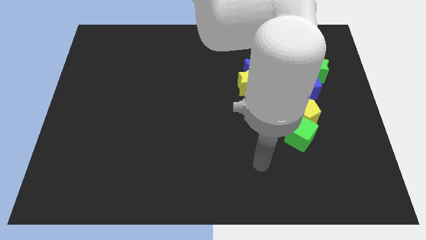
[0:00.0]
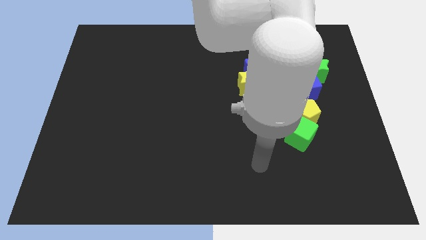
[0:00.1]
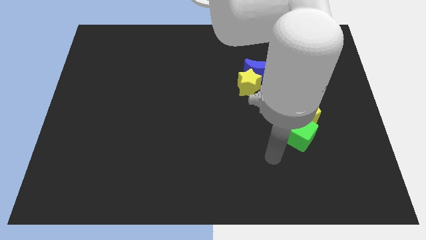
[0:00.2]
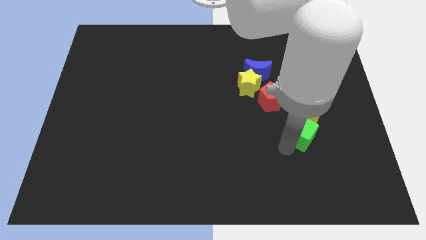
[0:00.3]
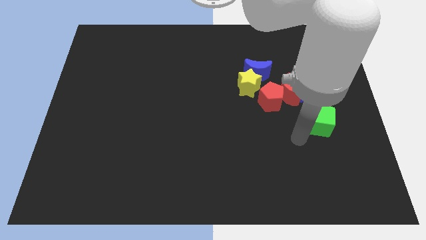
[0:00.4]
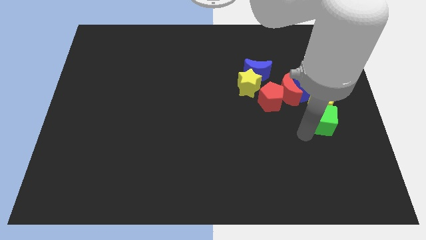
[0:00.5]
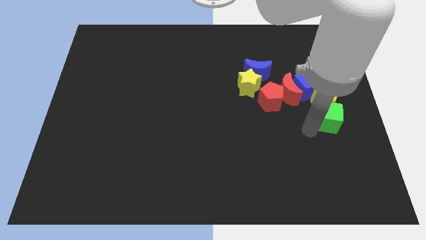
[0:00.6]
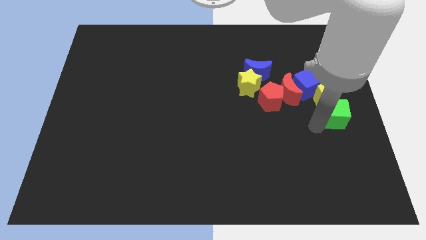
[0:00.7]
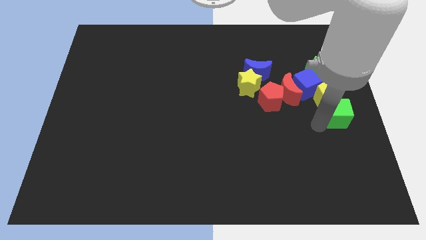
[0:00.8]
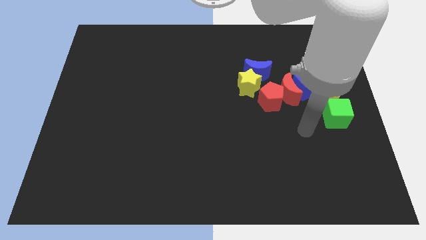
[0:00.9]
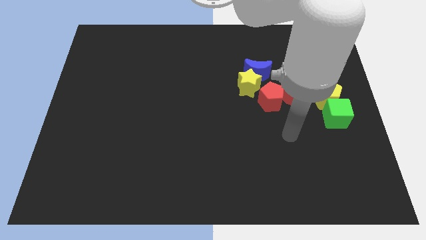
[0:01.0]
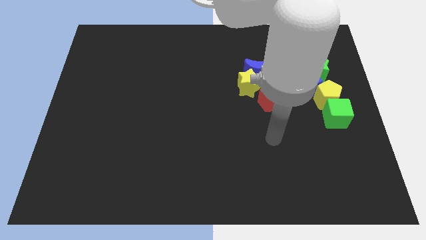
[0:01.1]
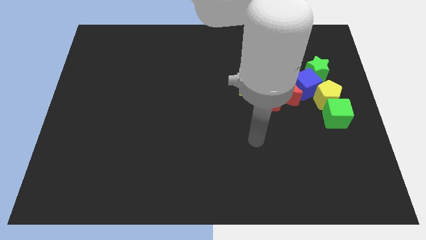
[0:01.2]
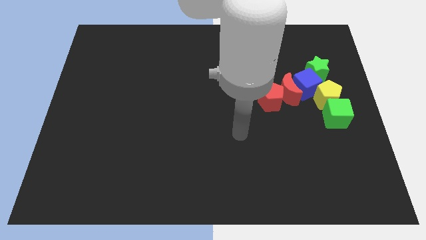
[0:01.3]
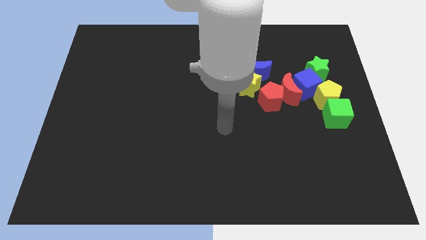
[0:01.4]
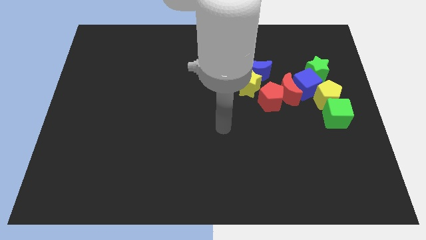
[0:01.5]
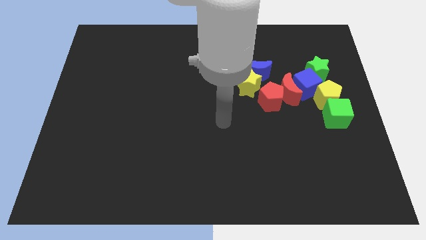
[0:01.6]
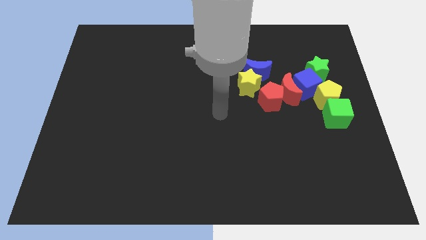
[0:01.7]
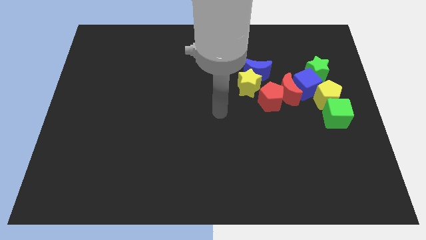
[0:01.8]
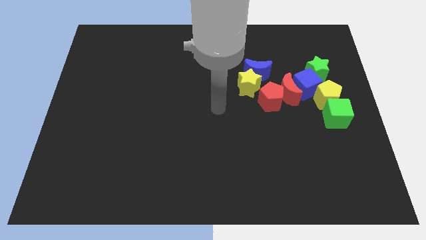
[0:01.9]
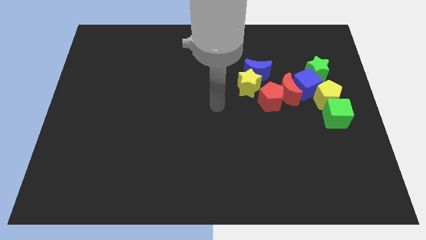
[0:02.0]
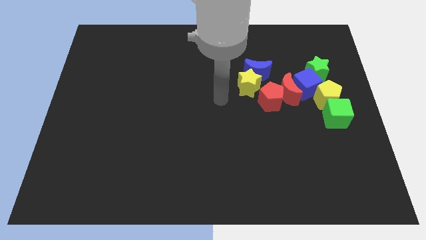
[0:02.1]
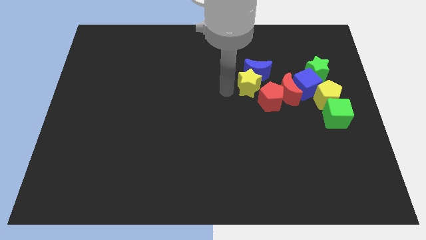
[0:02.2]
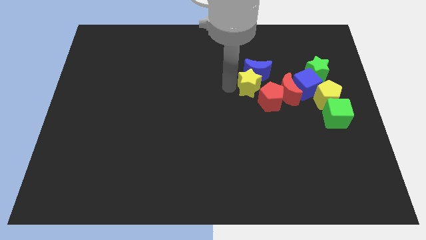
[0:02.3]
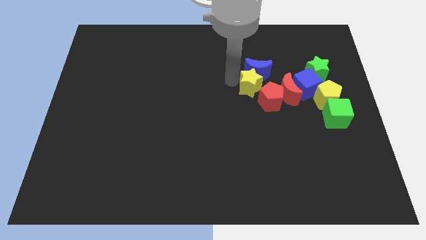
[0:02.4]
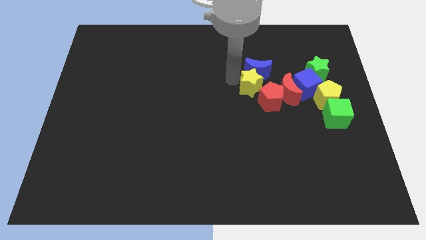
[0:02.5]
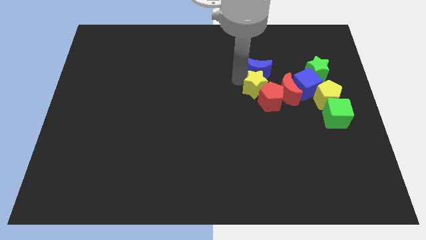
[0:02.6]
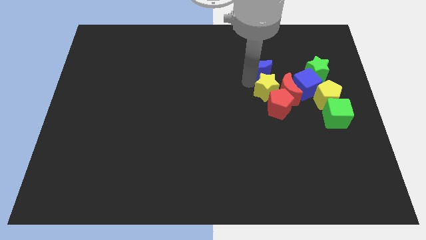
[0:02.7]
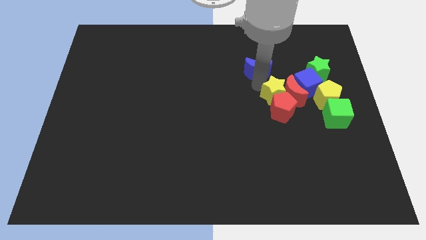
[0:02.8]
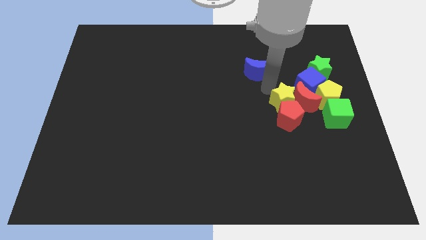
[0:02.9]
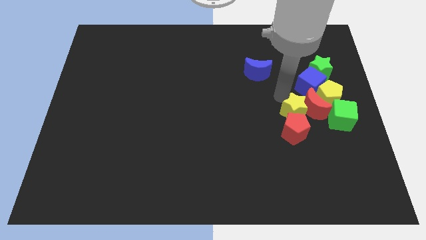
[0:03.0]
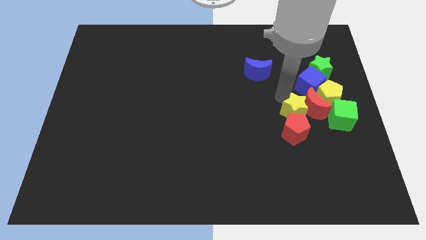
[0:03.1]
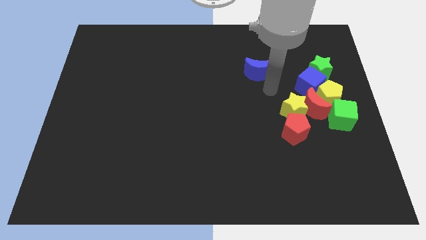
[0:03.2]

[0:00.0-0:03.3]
push all the blocks to the right side of the board

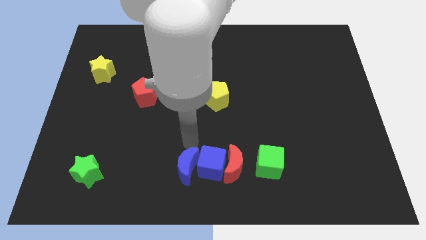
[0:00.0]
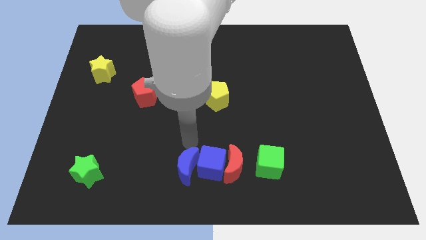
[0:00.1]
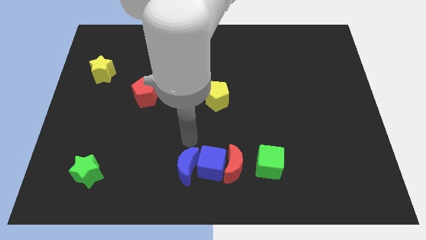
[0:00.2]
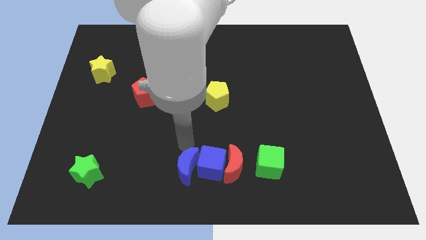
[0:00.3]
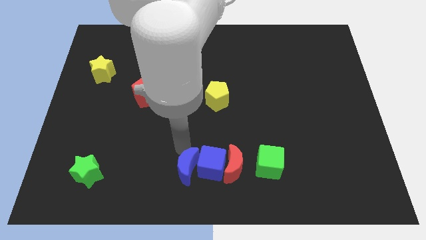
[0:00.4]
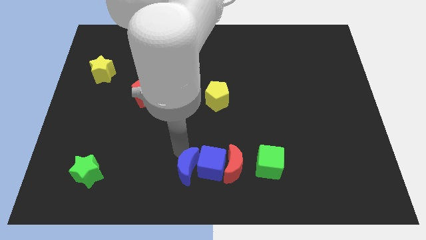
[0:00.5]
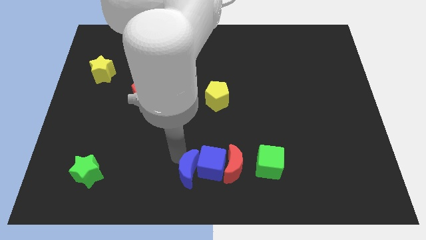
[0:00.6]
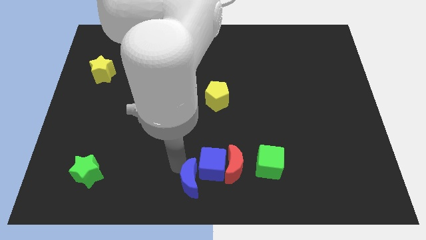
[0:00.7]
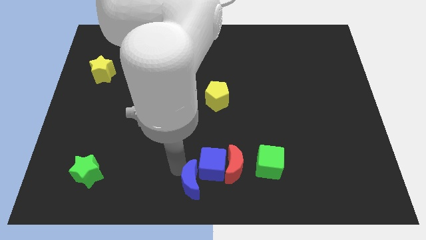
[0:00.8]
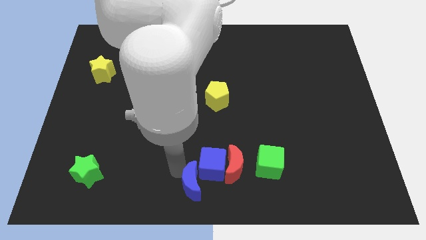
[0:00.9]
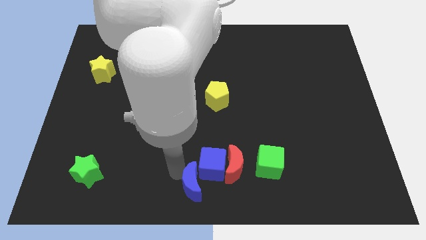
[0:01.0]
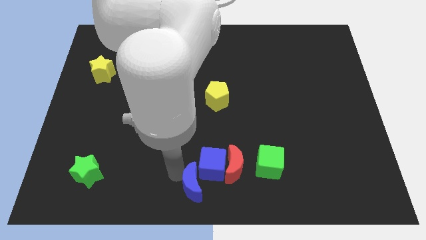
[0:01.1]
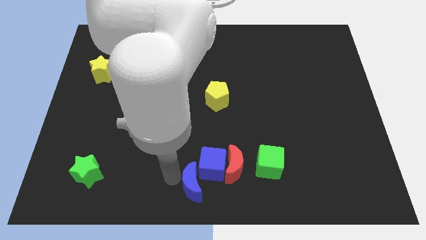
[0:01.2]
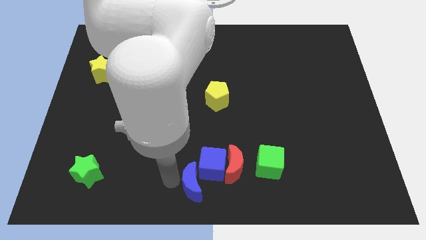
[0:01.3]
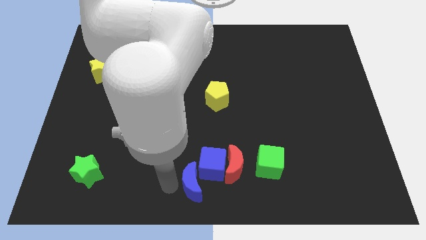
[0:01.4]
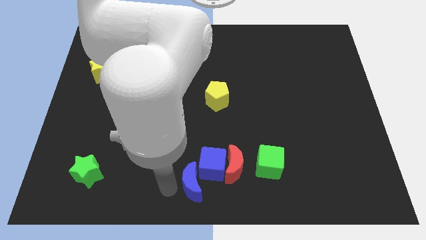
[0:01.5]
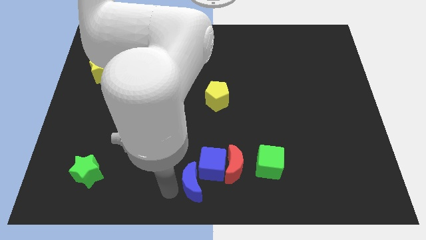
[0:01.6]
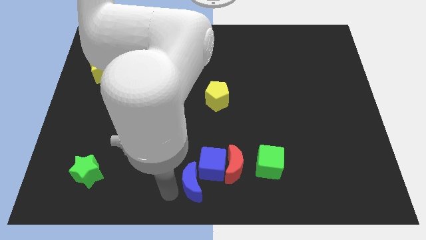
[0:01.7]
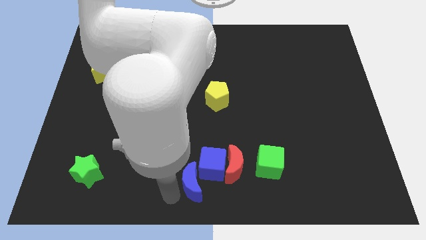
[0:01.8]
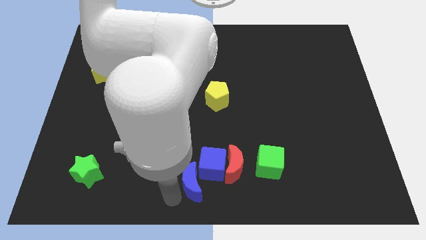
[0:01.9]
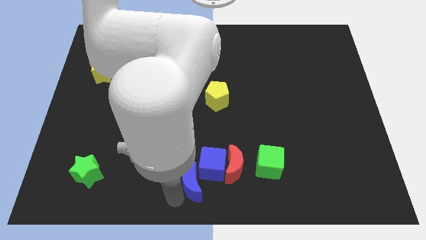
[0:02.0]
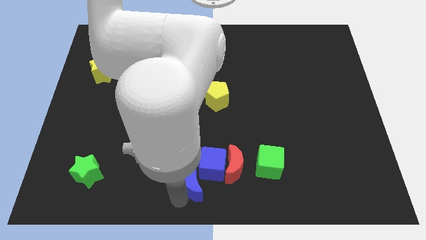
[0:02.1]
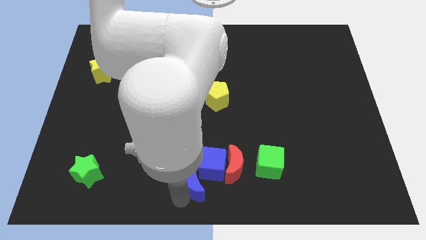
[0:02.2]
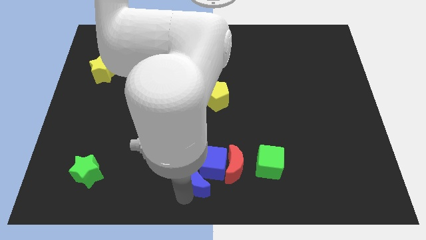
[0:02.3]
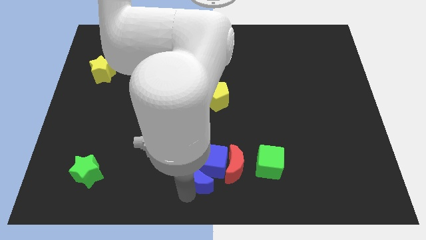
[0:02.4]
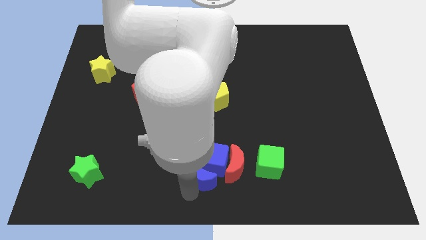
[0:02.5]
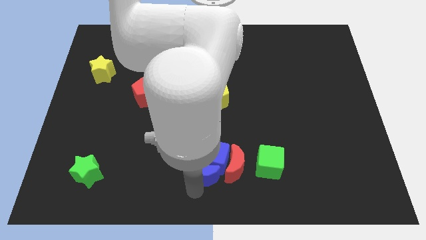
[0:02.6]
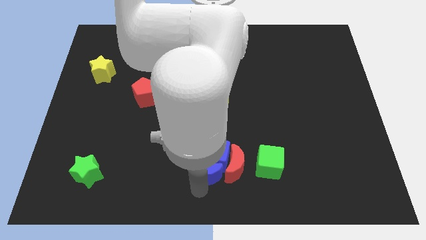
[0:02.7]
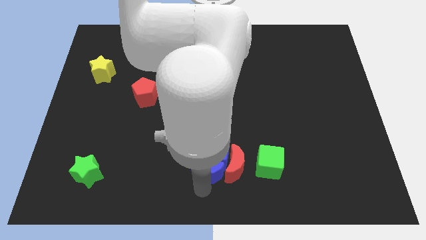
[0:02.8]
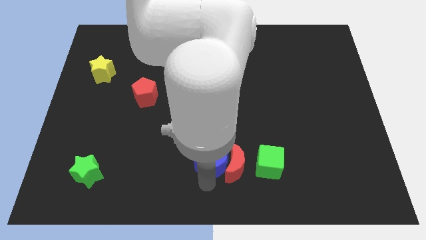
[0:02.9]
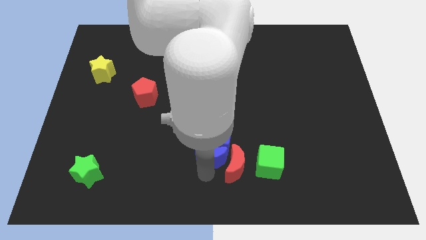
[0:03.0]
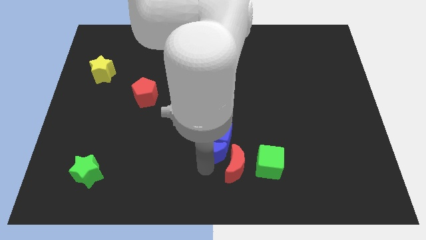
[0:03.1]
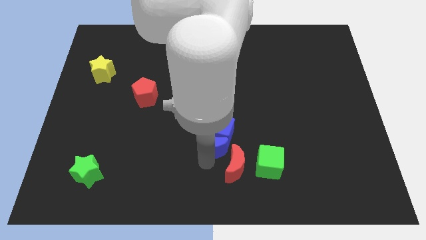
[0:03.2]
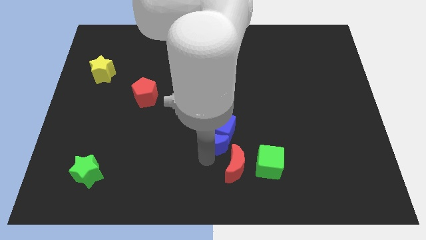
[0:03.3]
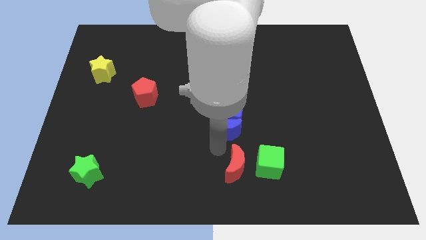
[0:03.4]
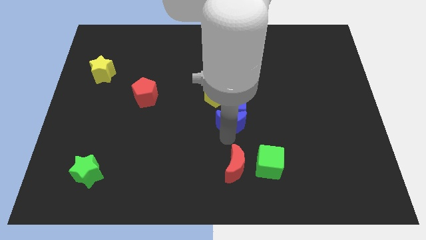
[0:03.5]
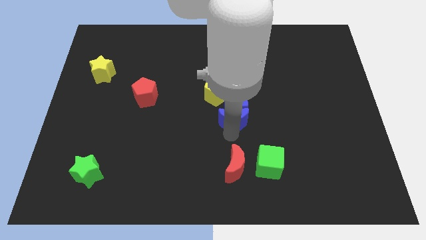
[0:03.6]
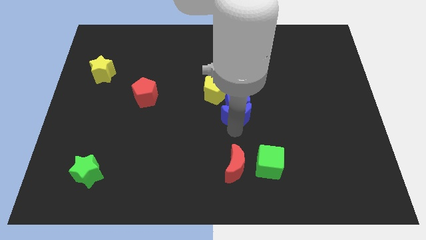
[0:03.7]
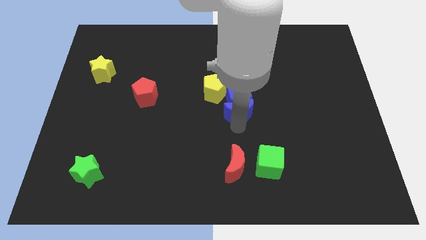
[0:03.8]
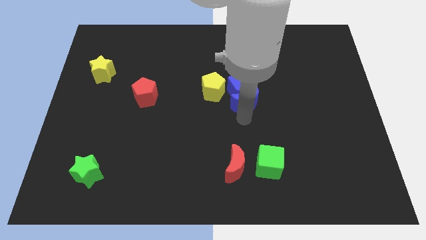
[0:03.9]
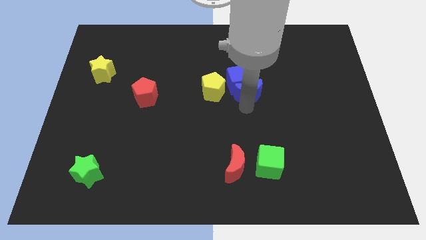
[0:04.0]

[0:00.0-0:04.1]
push the blue moon and the blue cube down towards the top right side

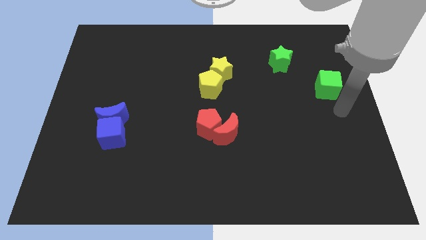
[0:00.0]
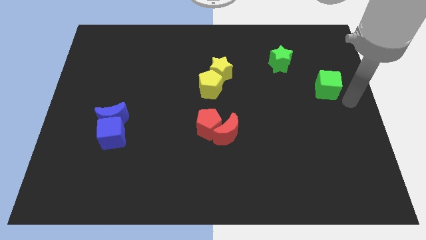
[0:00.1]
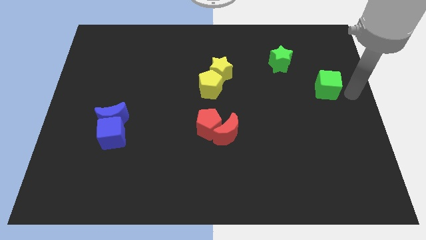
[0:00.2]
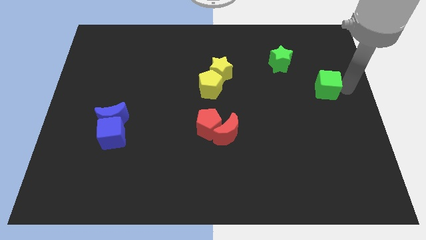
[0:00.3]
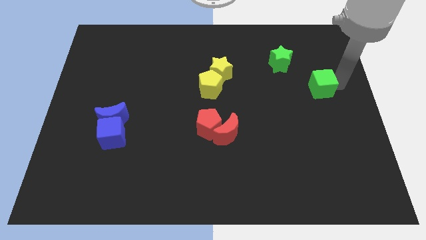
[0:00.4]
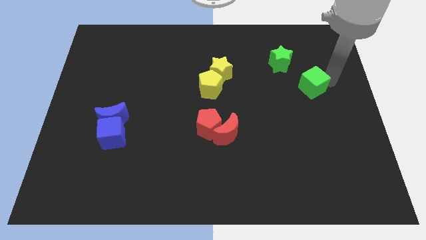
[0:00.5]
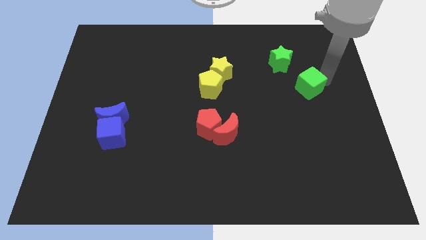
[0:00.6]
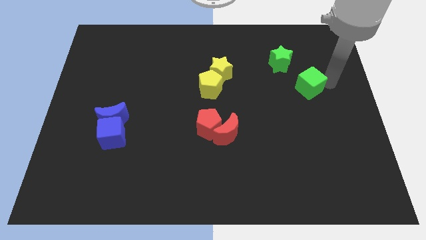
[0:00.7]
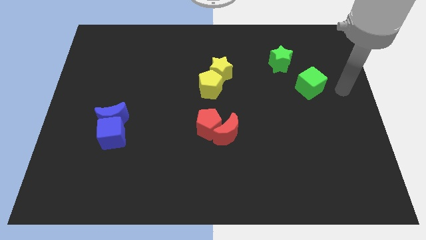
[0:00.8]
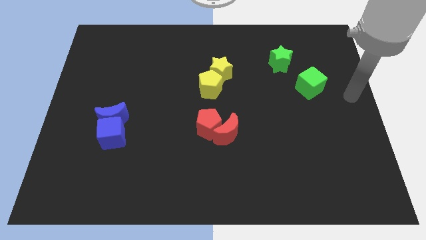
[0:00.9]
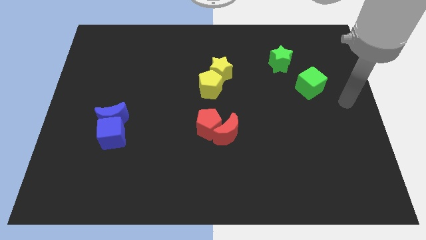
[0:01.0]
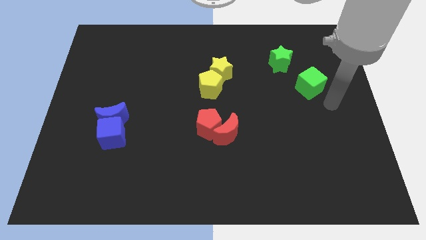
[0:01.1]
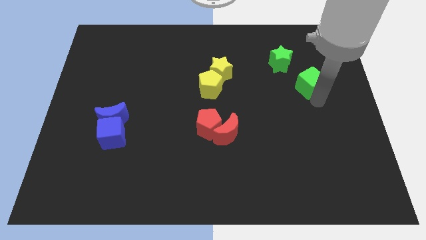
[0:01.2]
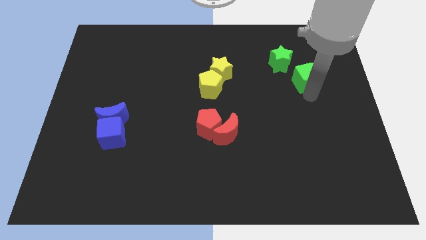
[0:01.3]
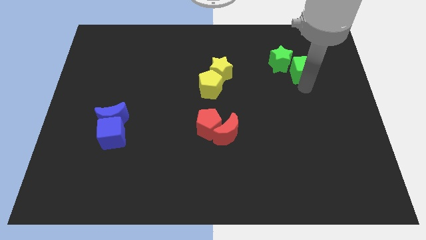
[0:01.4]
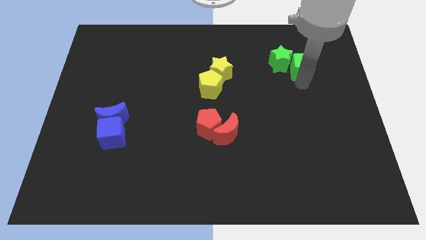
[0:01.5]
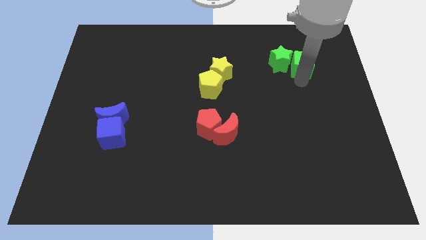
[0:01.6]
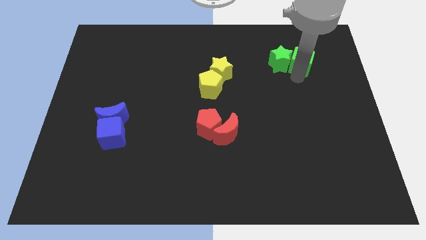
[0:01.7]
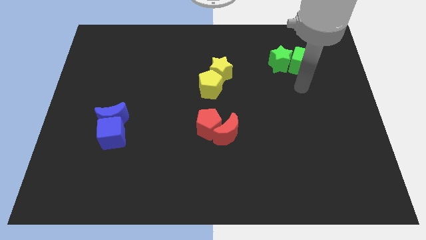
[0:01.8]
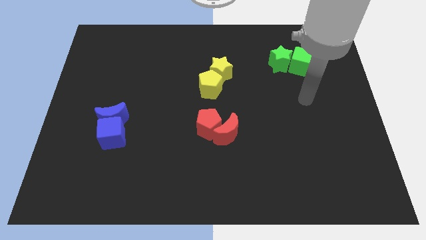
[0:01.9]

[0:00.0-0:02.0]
slide green cube into the green star
